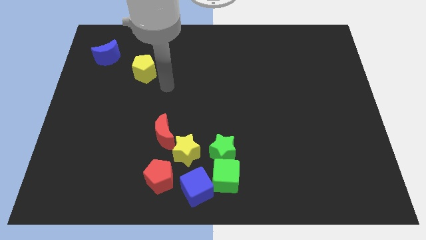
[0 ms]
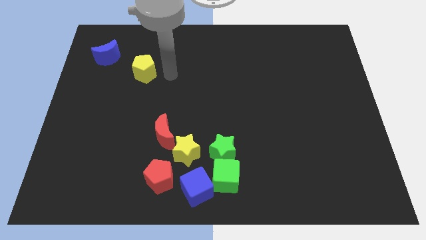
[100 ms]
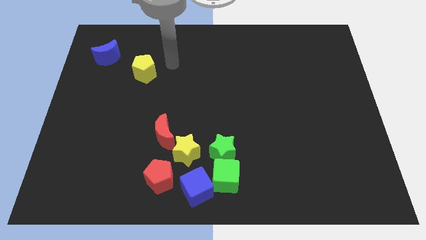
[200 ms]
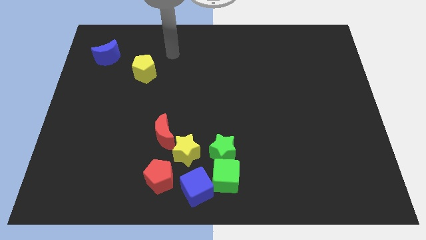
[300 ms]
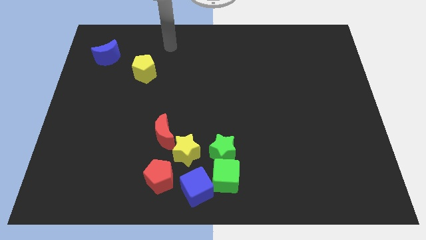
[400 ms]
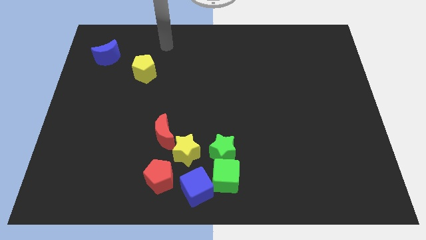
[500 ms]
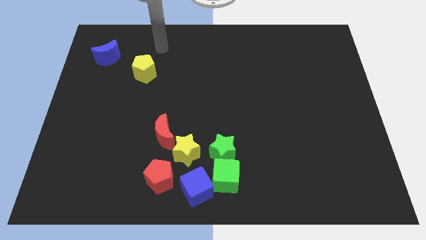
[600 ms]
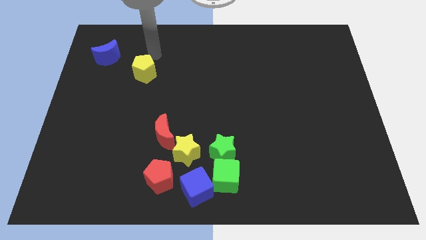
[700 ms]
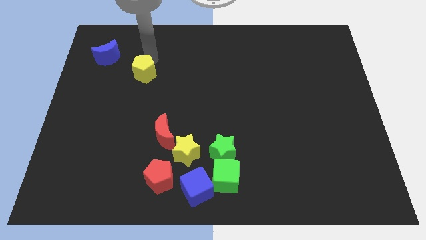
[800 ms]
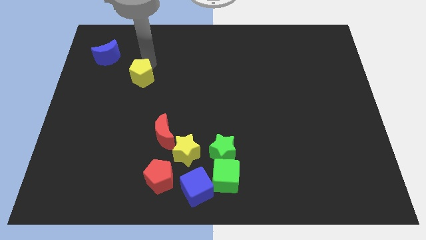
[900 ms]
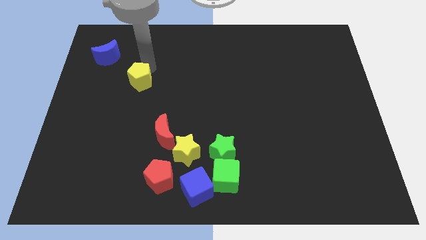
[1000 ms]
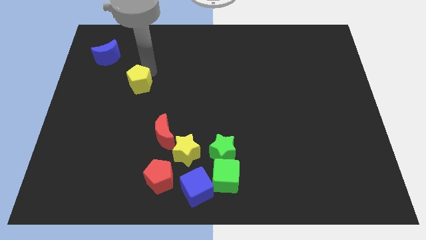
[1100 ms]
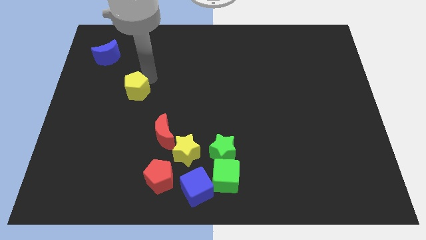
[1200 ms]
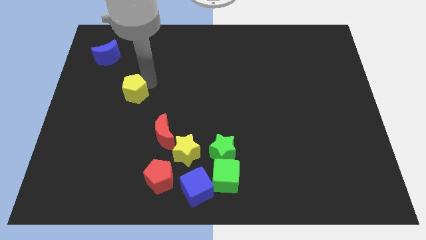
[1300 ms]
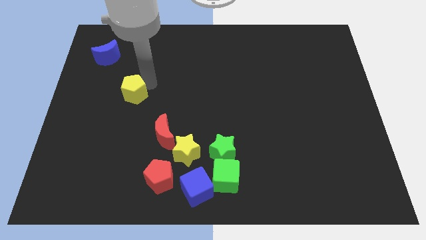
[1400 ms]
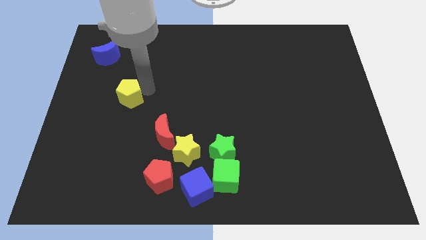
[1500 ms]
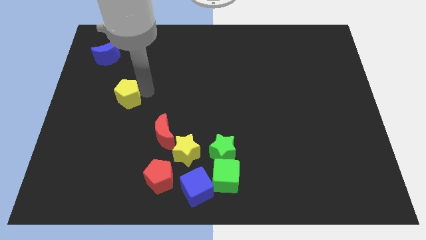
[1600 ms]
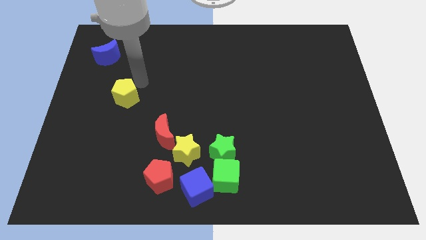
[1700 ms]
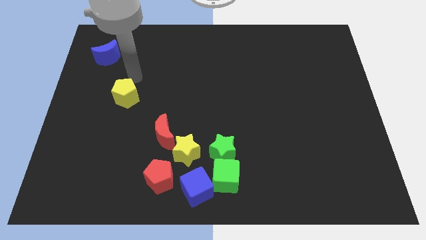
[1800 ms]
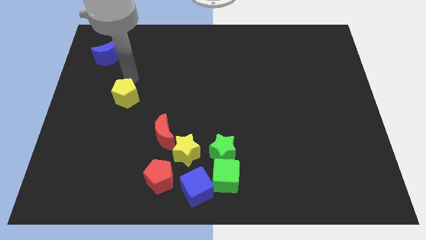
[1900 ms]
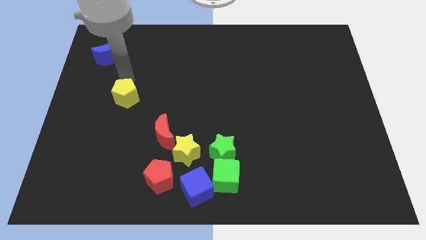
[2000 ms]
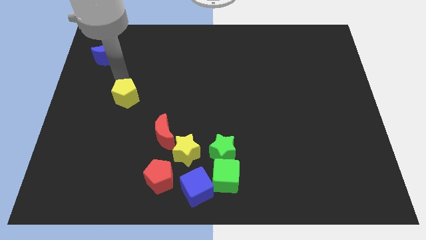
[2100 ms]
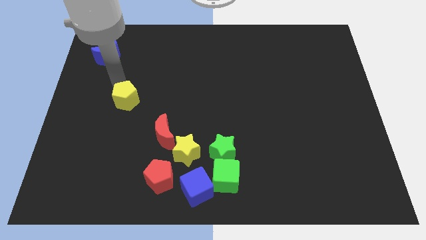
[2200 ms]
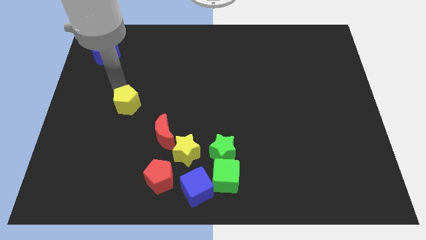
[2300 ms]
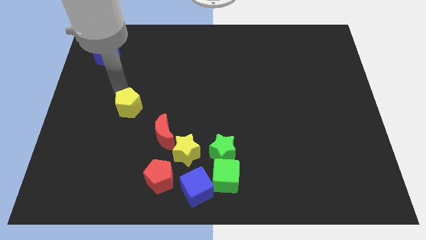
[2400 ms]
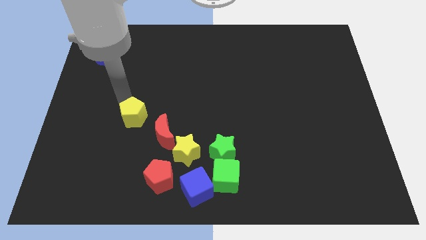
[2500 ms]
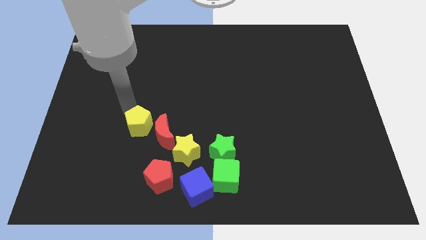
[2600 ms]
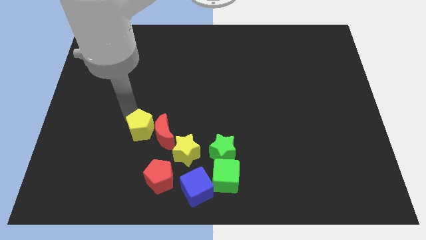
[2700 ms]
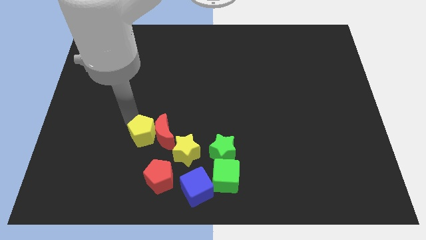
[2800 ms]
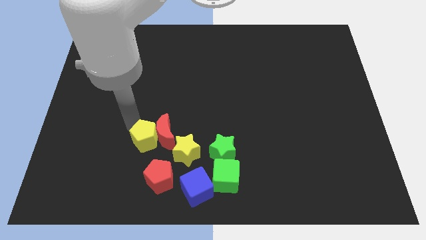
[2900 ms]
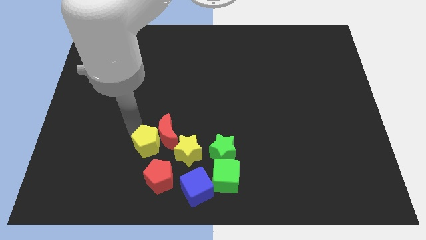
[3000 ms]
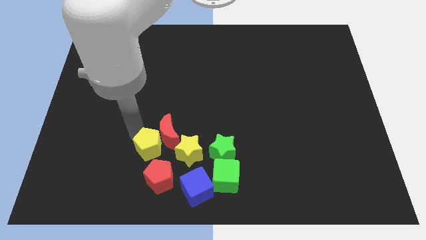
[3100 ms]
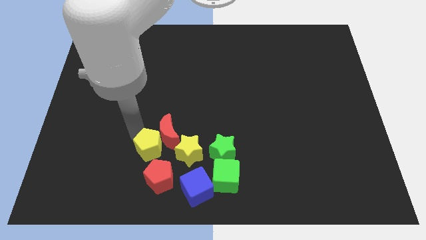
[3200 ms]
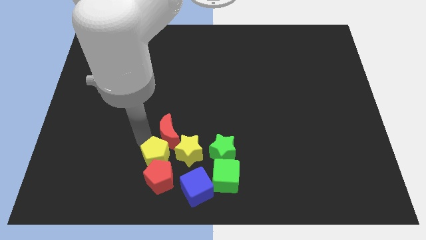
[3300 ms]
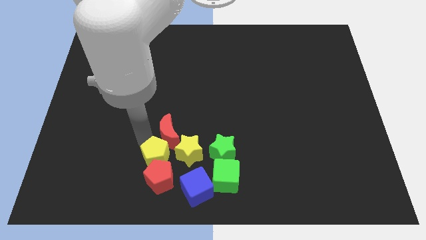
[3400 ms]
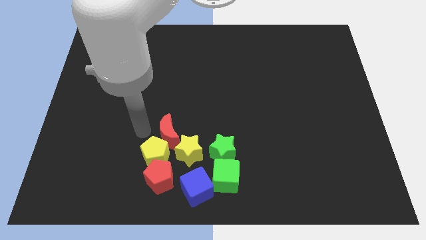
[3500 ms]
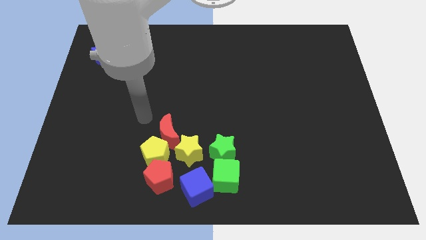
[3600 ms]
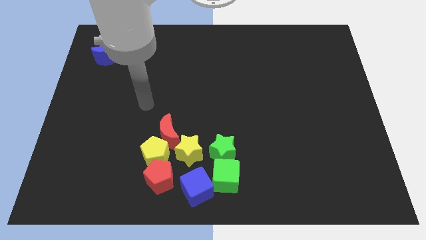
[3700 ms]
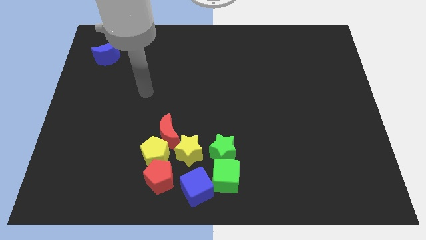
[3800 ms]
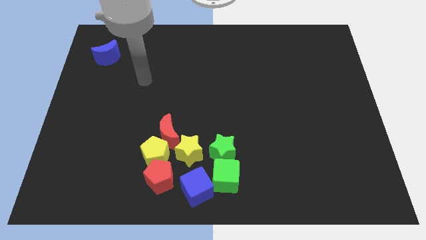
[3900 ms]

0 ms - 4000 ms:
move the yellow pentagon into the red pentagon

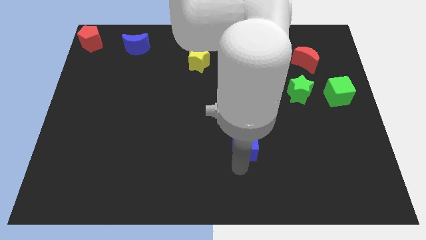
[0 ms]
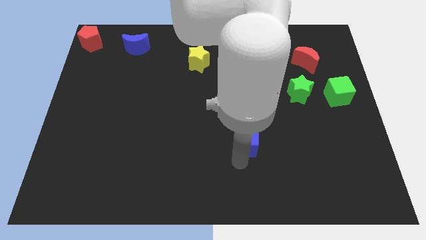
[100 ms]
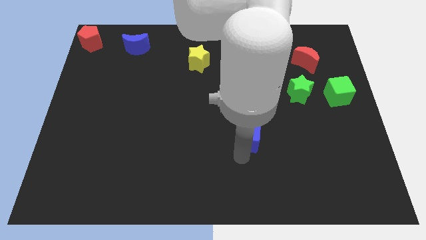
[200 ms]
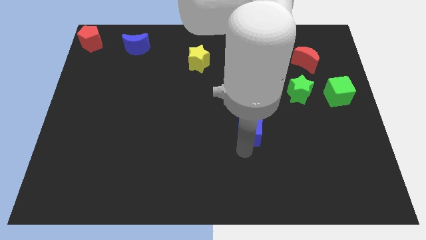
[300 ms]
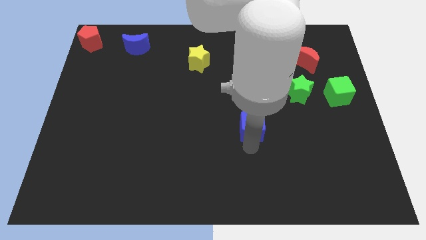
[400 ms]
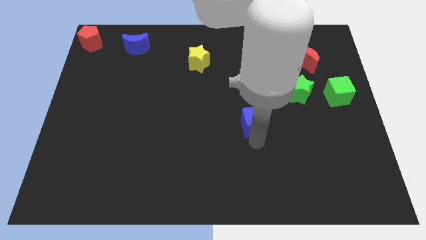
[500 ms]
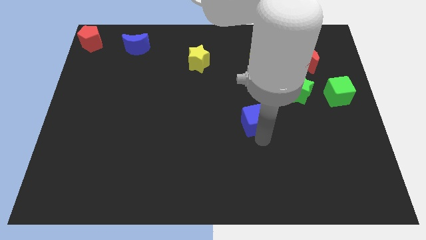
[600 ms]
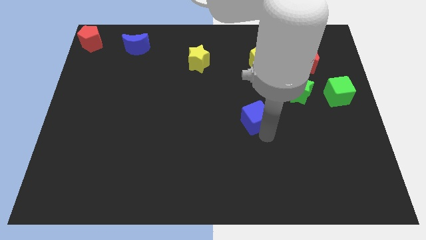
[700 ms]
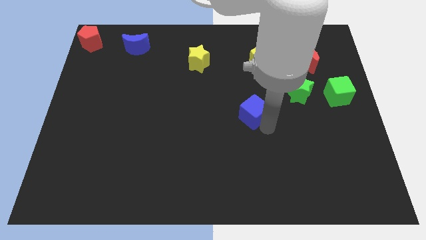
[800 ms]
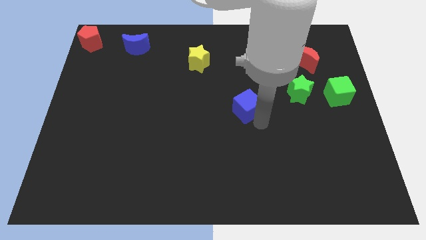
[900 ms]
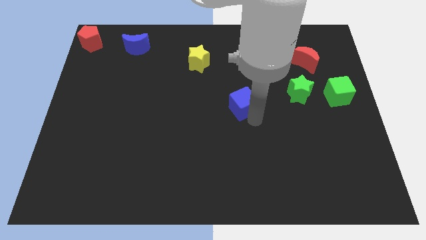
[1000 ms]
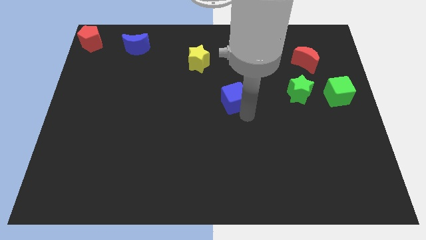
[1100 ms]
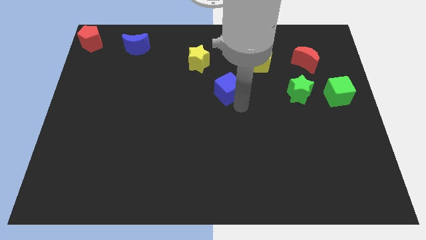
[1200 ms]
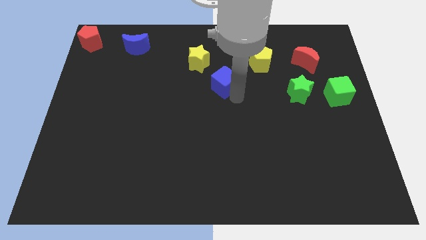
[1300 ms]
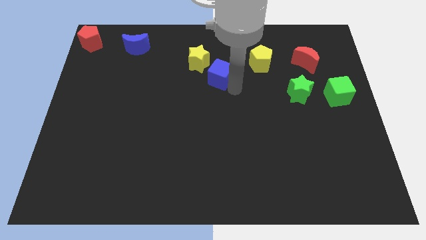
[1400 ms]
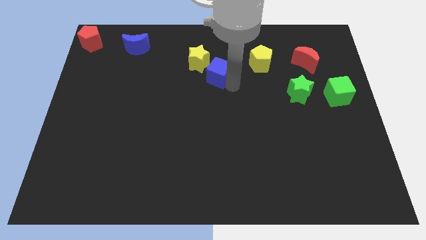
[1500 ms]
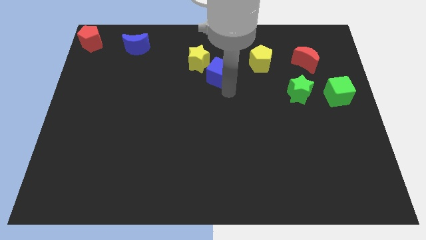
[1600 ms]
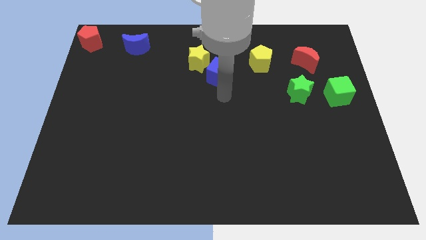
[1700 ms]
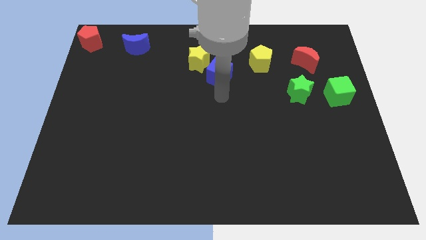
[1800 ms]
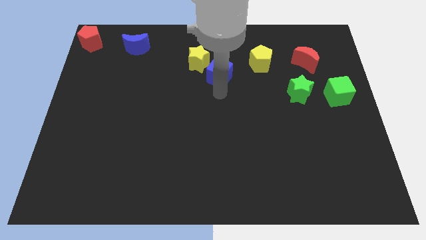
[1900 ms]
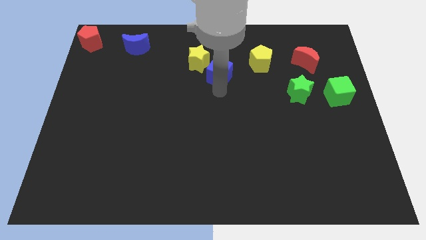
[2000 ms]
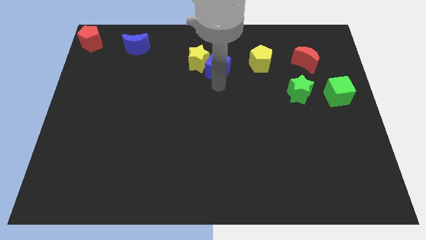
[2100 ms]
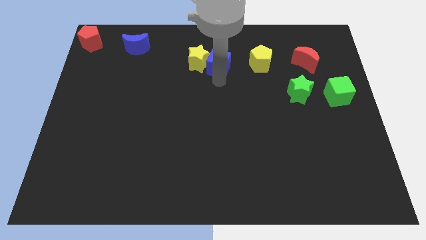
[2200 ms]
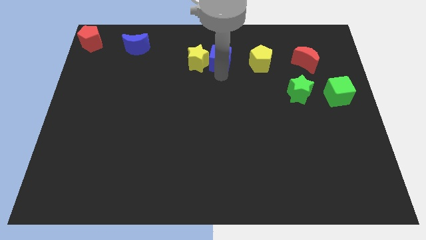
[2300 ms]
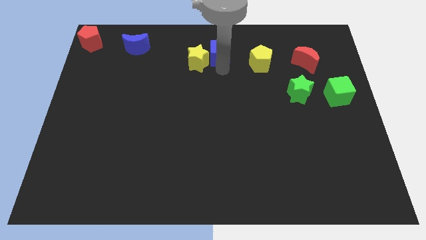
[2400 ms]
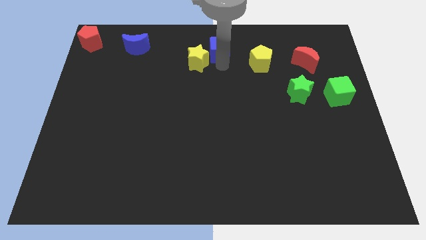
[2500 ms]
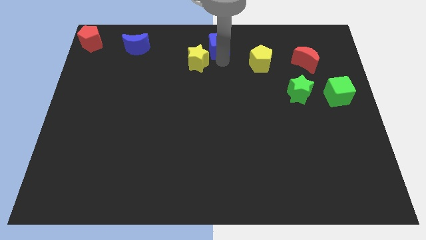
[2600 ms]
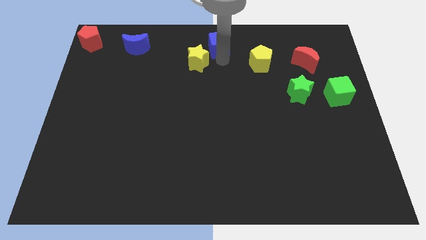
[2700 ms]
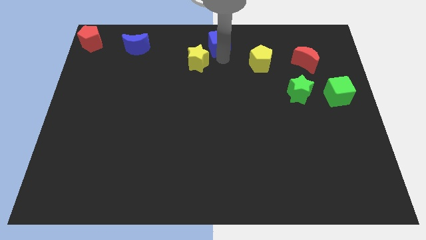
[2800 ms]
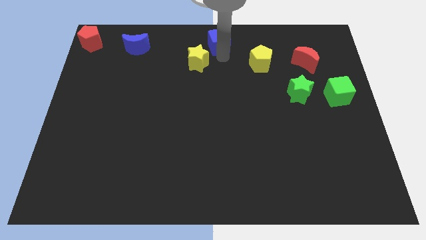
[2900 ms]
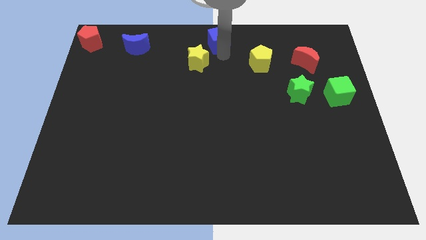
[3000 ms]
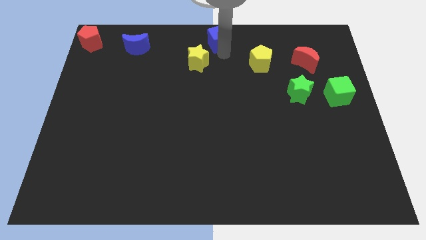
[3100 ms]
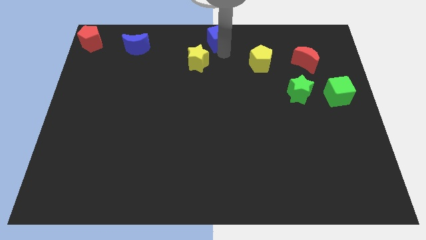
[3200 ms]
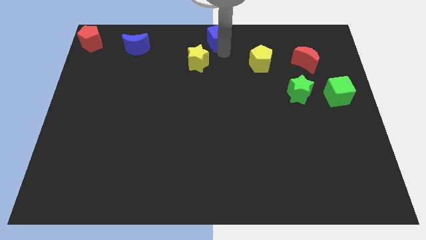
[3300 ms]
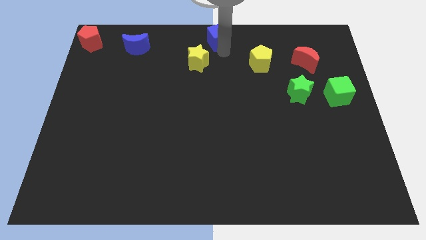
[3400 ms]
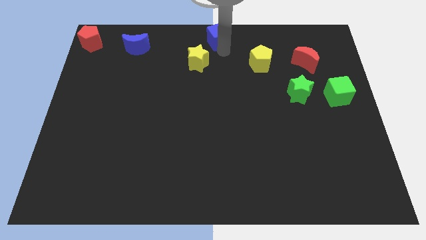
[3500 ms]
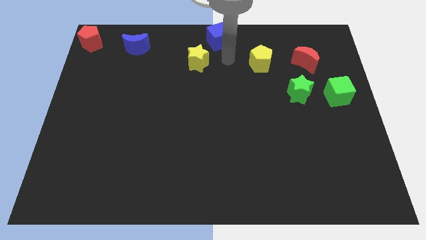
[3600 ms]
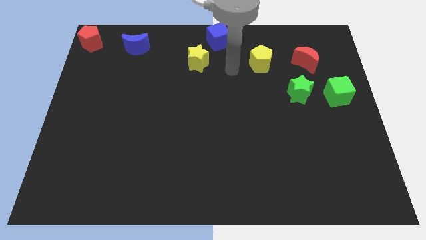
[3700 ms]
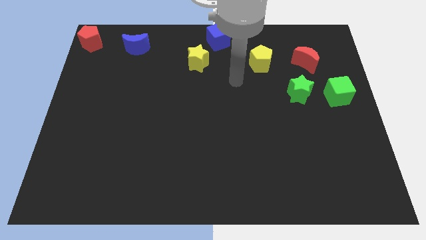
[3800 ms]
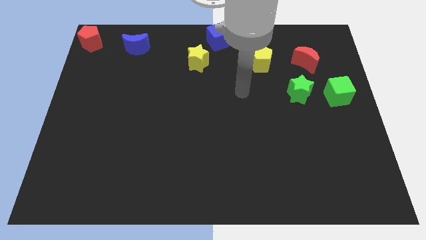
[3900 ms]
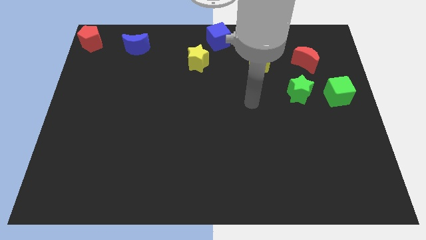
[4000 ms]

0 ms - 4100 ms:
slide blue cube to the top center

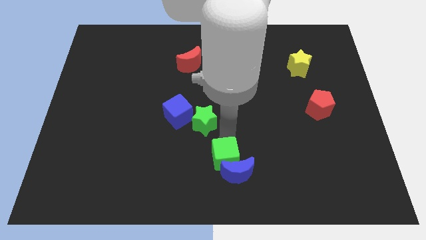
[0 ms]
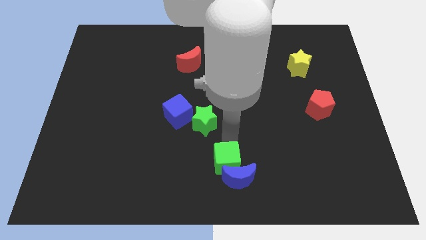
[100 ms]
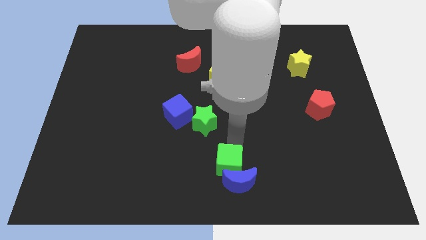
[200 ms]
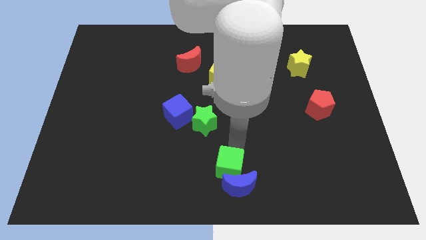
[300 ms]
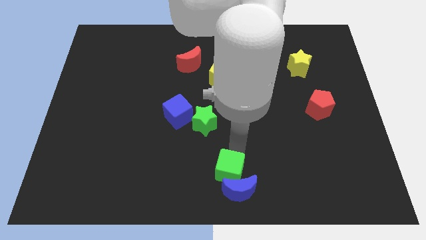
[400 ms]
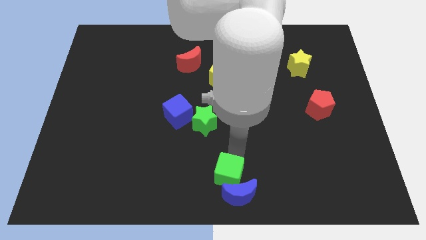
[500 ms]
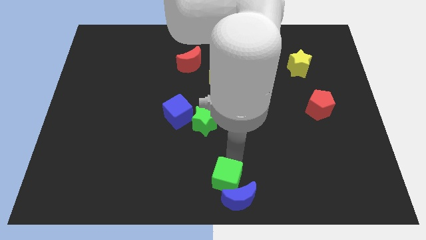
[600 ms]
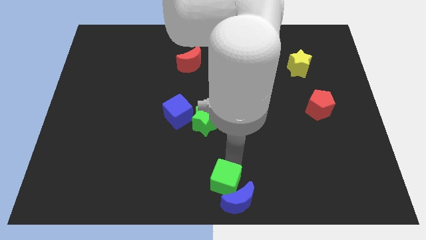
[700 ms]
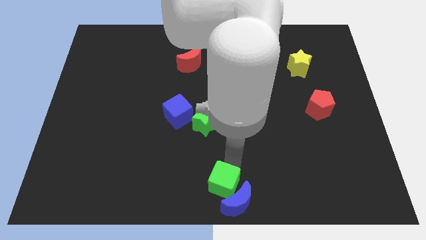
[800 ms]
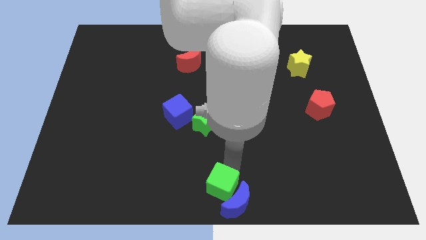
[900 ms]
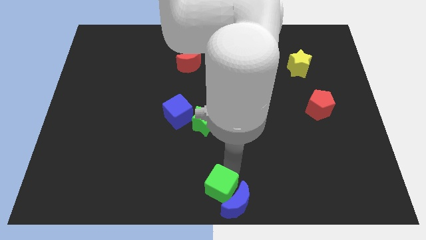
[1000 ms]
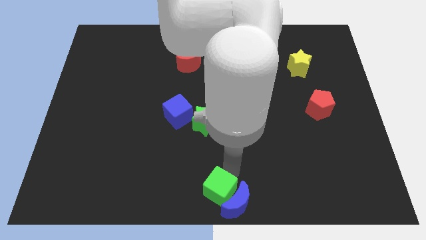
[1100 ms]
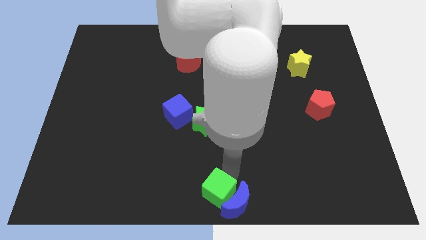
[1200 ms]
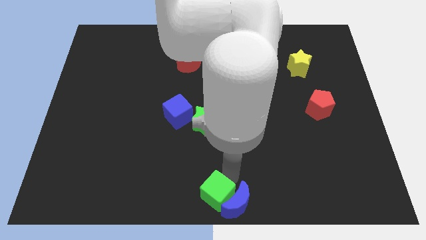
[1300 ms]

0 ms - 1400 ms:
move the green cube to the bottom center of the board
